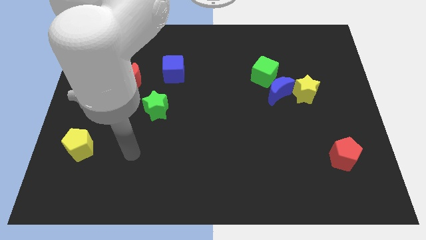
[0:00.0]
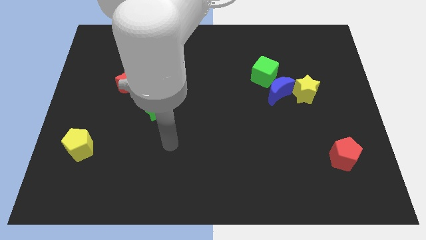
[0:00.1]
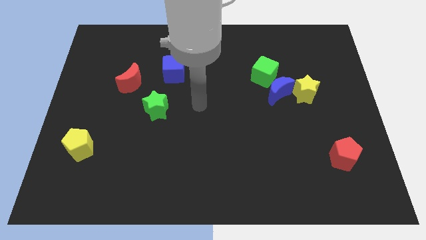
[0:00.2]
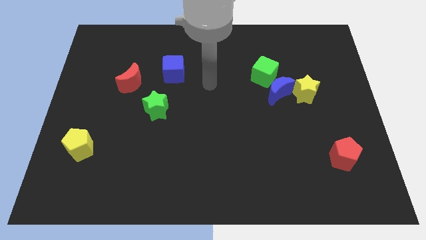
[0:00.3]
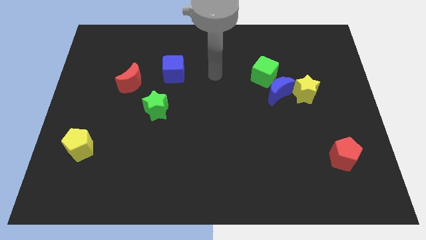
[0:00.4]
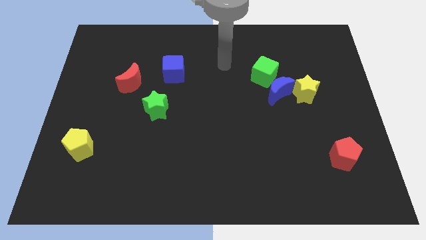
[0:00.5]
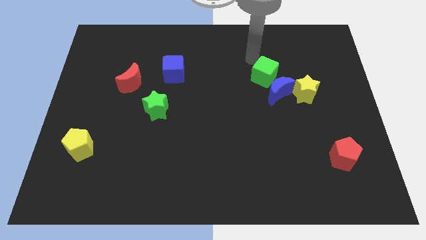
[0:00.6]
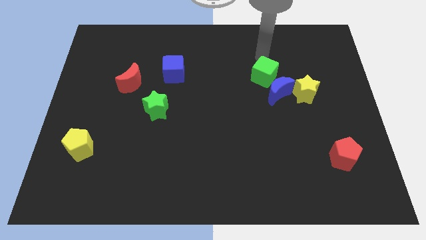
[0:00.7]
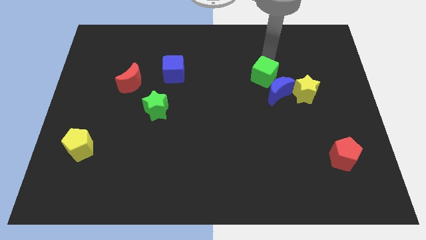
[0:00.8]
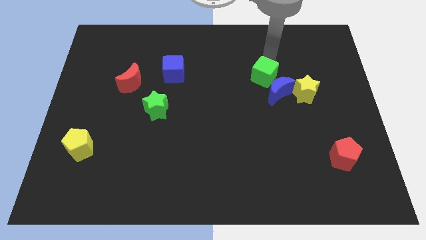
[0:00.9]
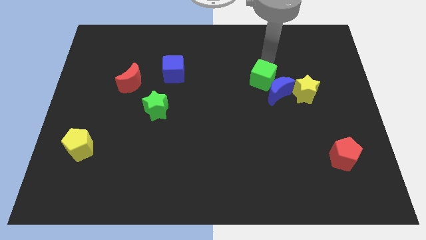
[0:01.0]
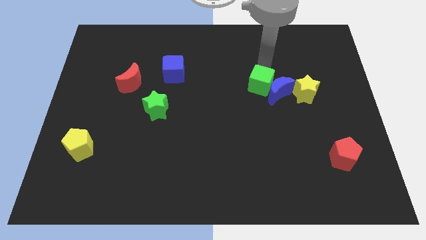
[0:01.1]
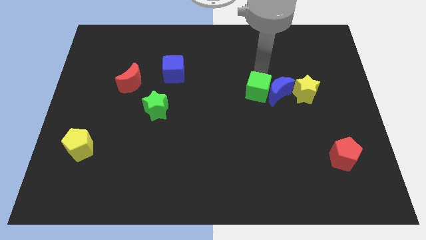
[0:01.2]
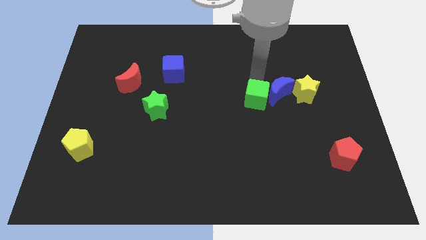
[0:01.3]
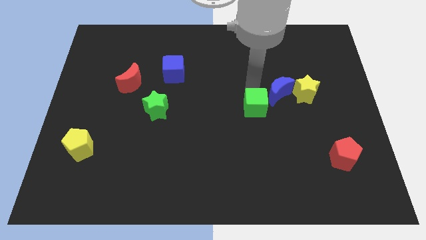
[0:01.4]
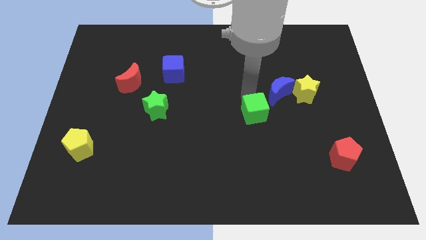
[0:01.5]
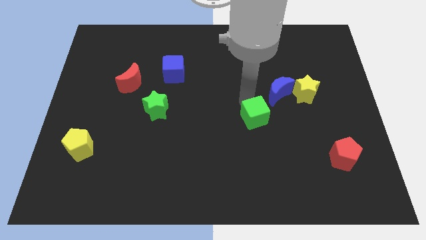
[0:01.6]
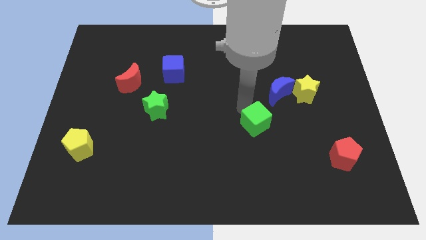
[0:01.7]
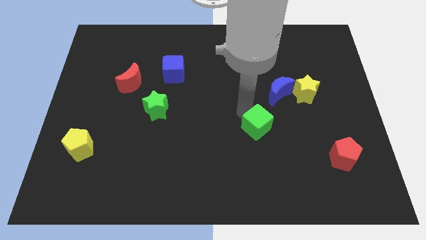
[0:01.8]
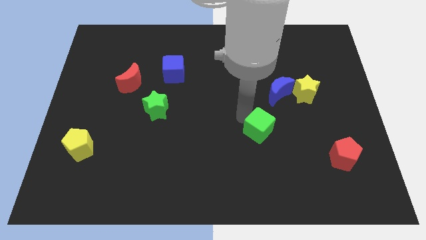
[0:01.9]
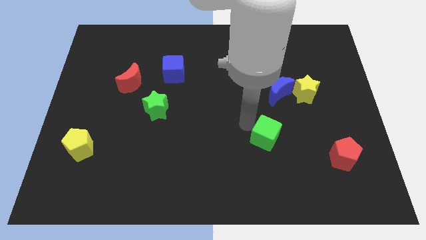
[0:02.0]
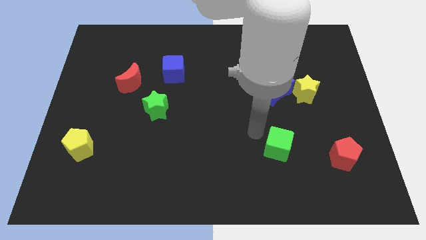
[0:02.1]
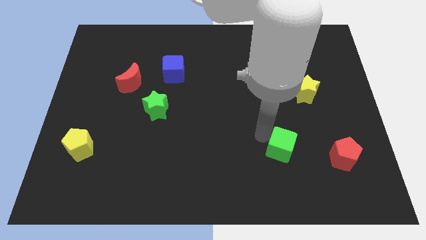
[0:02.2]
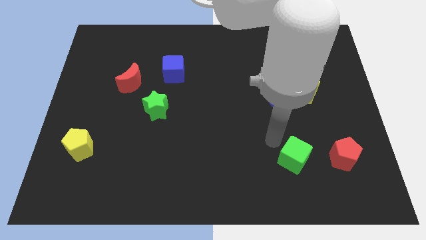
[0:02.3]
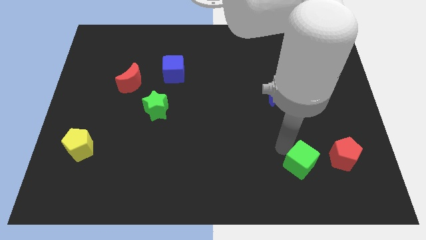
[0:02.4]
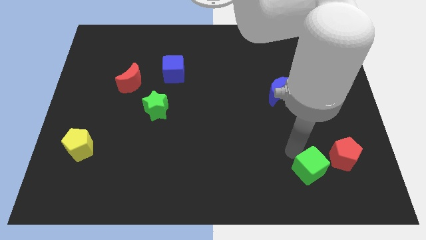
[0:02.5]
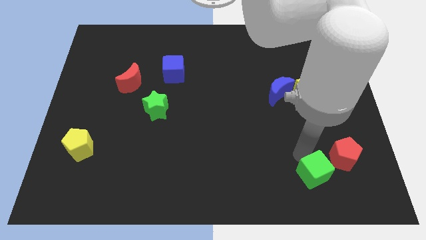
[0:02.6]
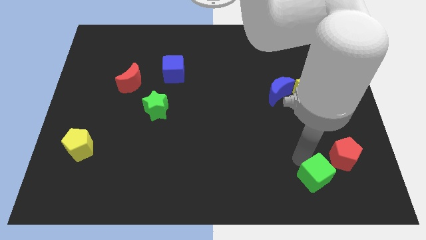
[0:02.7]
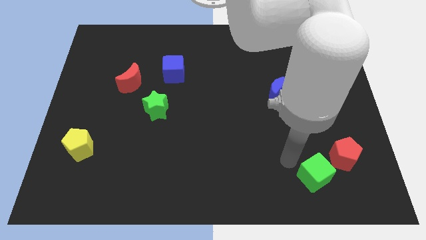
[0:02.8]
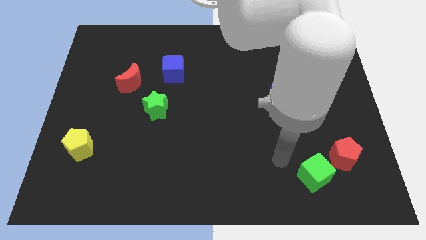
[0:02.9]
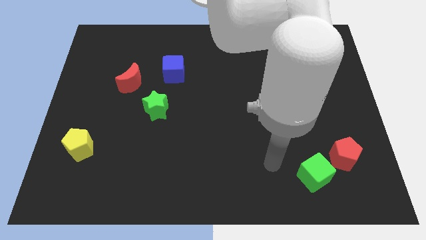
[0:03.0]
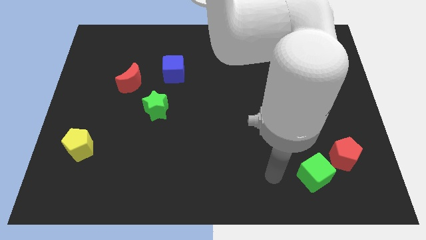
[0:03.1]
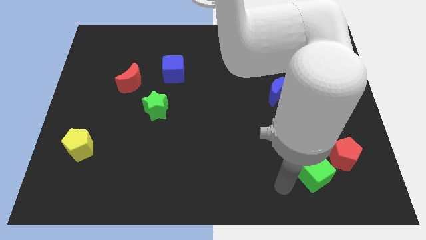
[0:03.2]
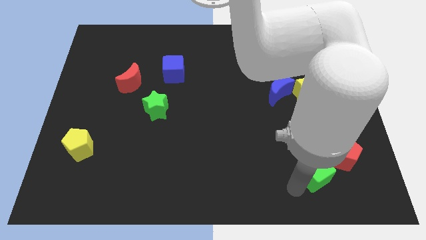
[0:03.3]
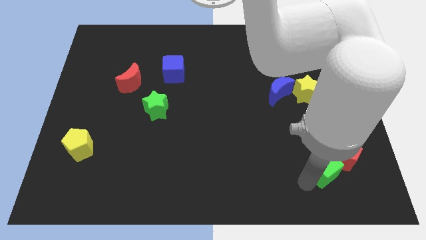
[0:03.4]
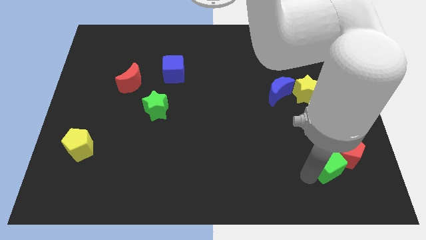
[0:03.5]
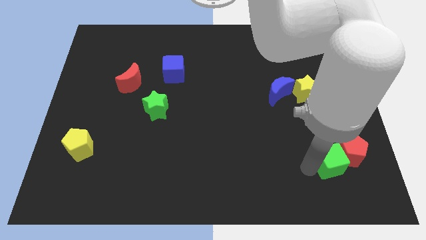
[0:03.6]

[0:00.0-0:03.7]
slide the green cube next to the red pentagon

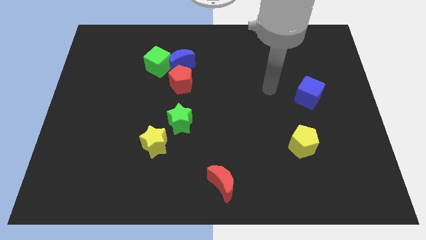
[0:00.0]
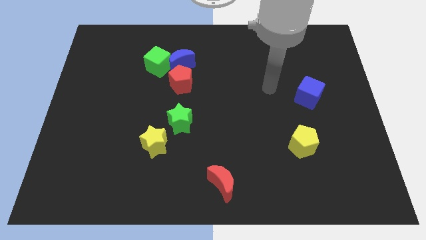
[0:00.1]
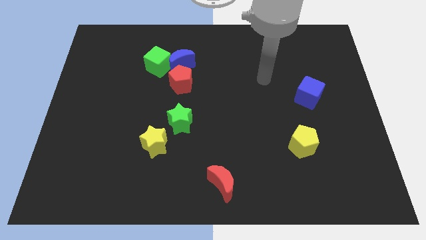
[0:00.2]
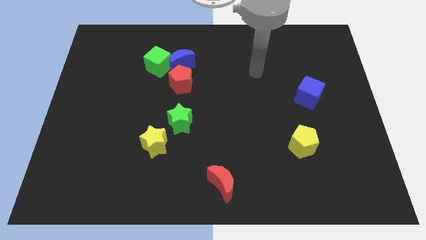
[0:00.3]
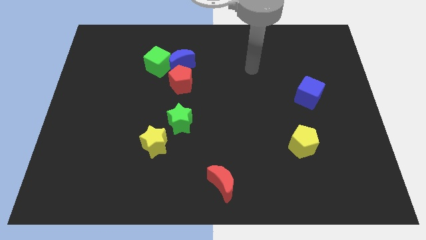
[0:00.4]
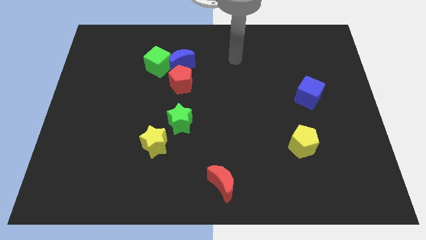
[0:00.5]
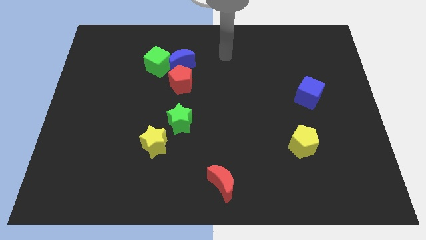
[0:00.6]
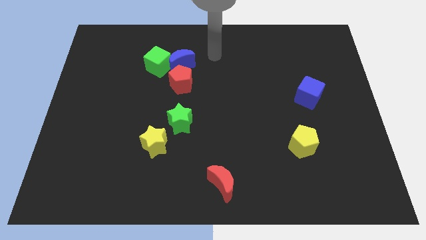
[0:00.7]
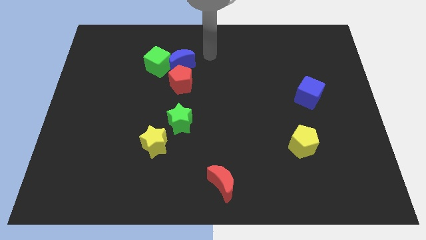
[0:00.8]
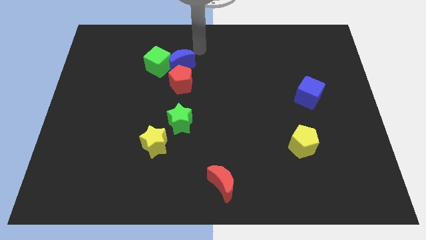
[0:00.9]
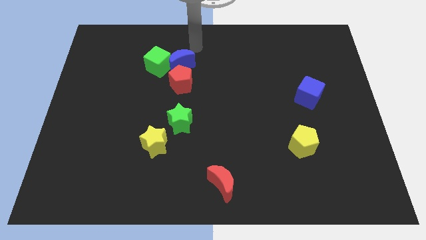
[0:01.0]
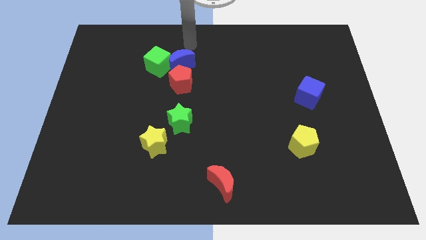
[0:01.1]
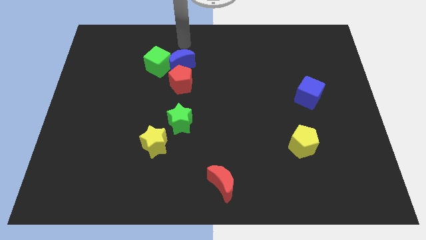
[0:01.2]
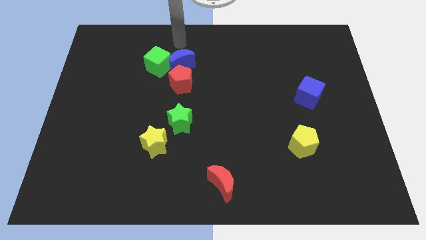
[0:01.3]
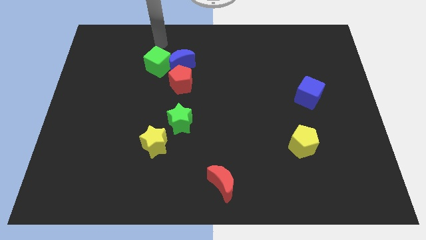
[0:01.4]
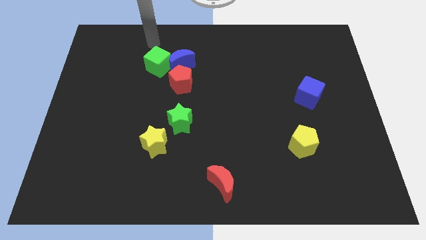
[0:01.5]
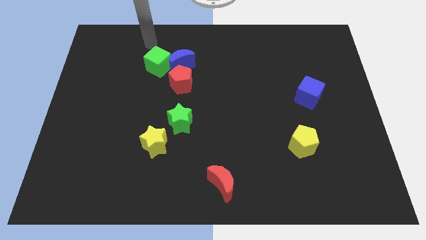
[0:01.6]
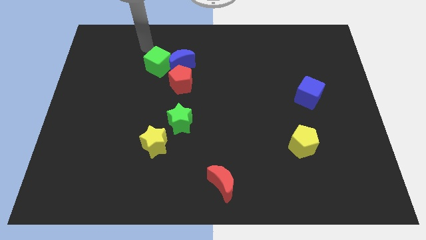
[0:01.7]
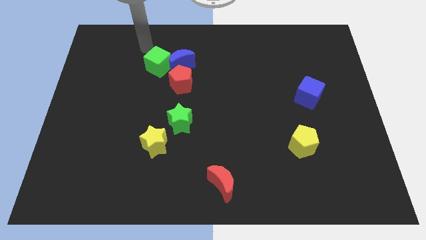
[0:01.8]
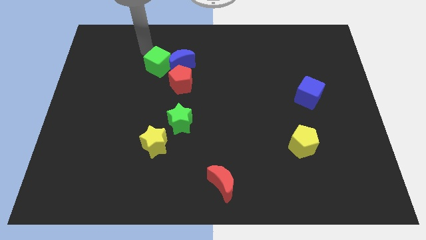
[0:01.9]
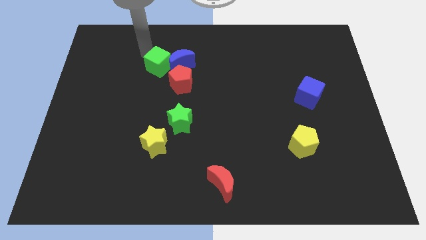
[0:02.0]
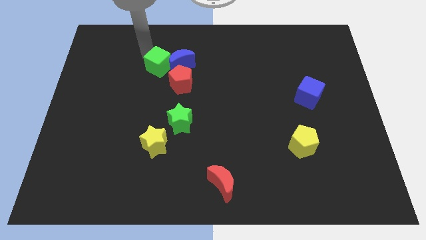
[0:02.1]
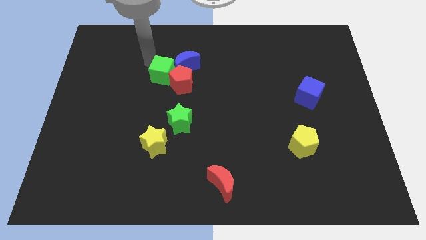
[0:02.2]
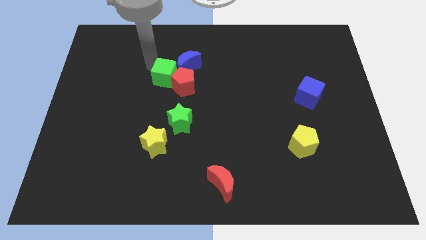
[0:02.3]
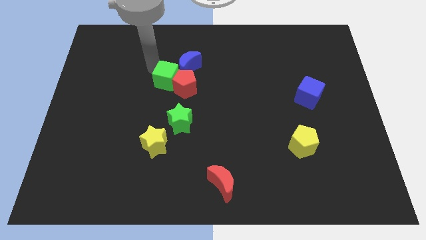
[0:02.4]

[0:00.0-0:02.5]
put the green cube to the red pentagon

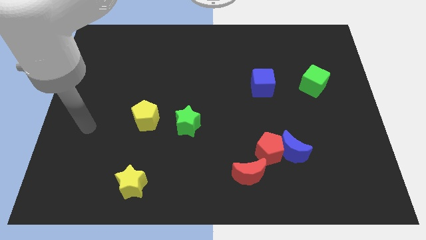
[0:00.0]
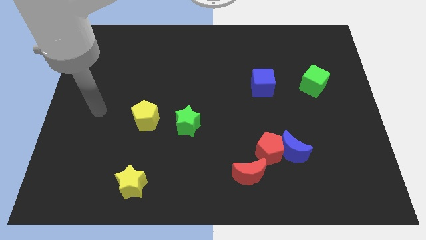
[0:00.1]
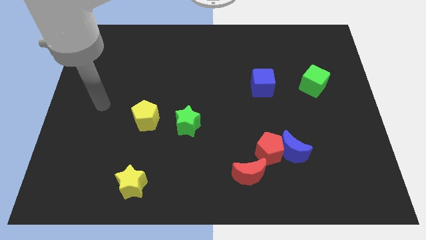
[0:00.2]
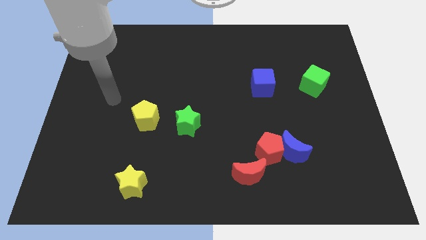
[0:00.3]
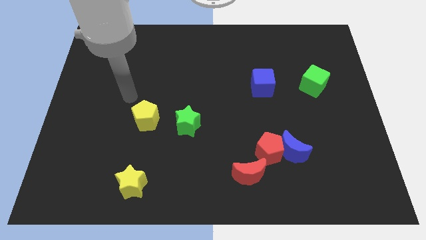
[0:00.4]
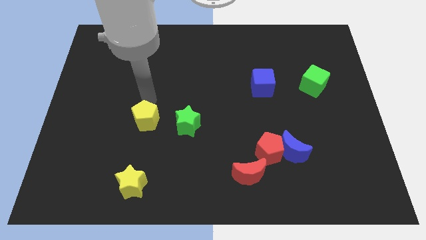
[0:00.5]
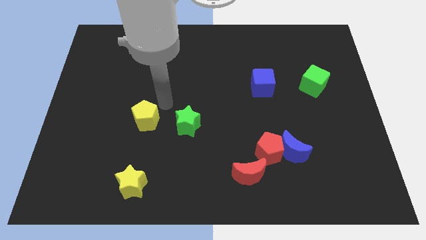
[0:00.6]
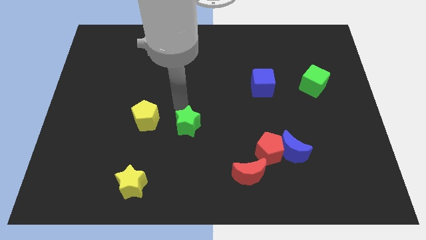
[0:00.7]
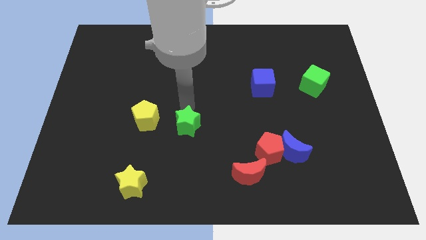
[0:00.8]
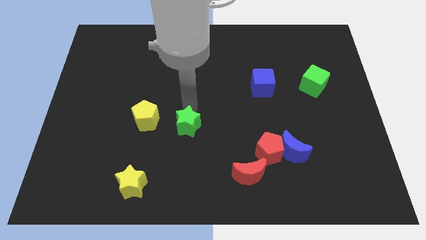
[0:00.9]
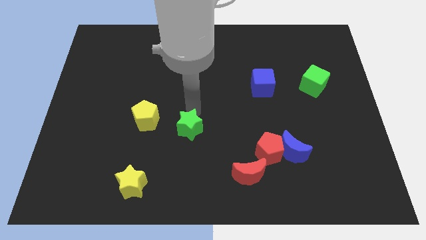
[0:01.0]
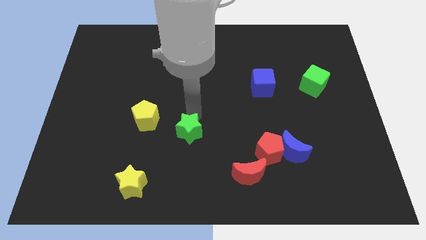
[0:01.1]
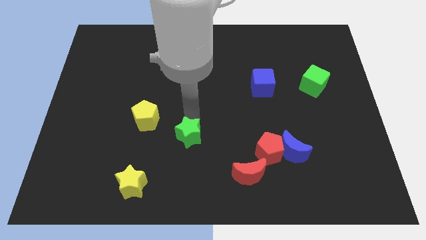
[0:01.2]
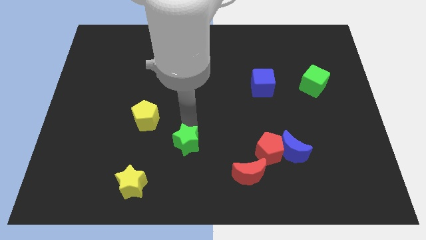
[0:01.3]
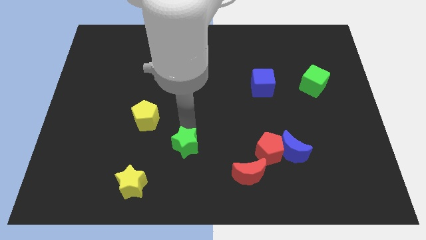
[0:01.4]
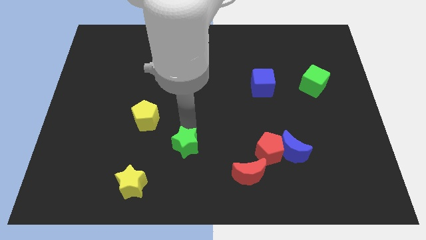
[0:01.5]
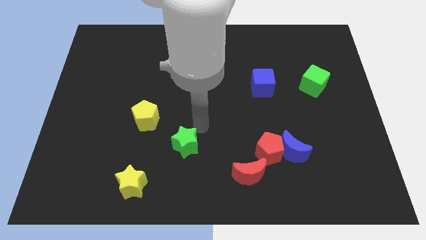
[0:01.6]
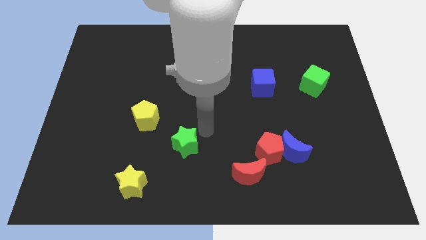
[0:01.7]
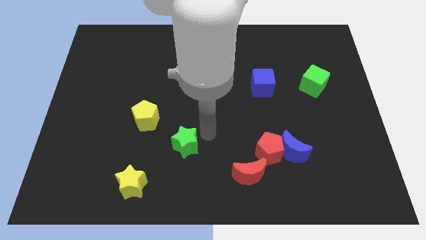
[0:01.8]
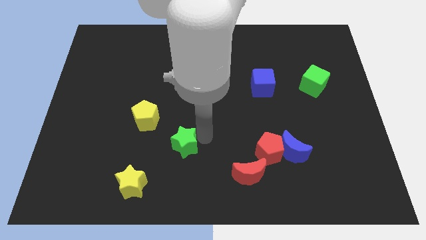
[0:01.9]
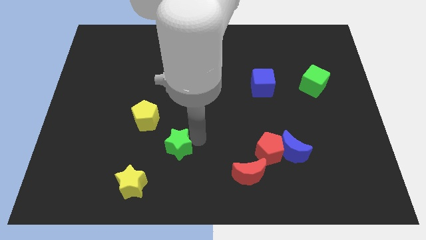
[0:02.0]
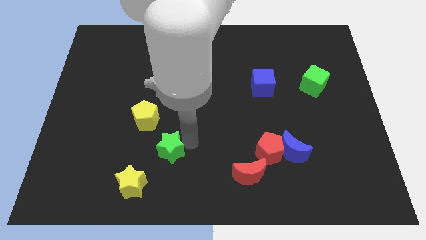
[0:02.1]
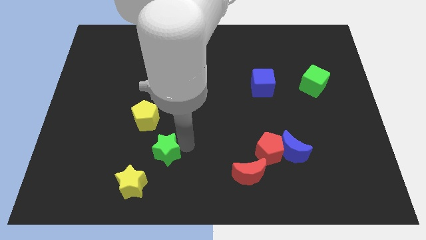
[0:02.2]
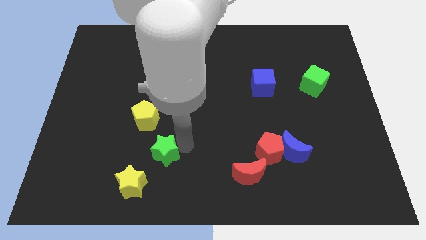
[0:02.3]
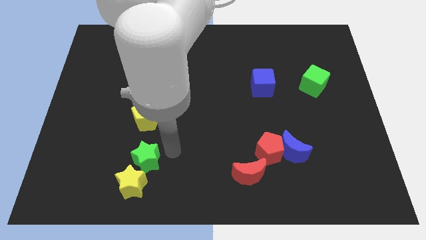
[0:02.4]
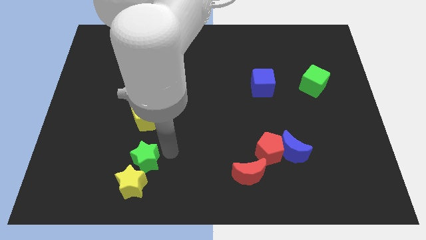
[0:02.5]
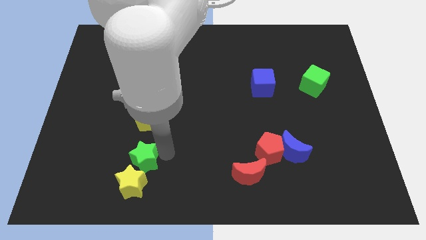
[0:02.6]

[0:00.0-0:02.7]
push the green star next to the yellow star
